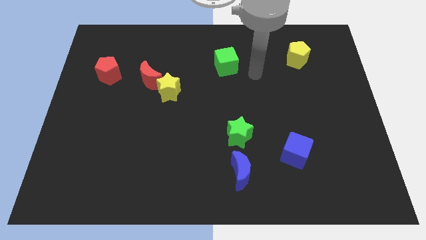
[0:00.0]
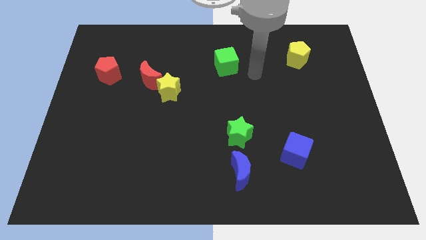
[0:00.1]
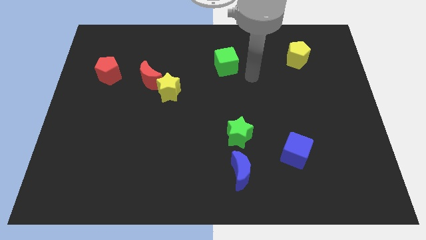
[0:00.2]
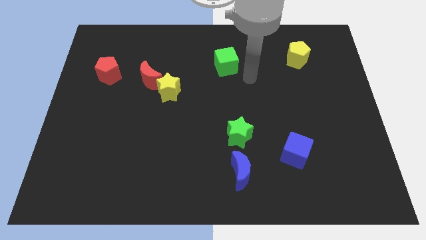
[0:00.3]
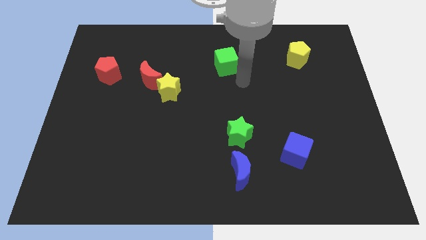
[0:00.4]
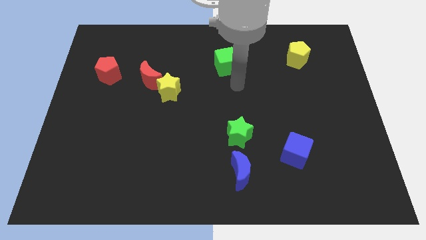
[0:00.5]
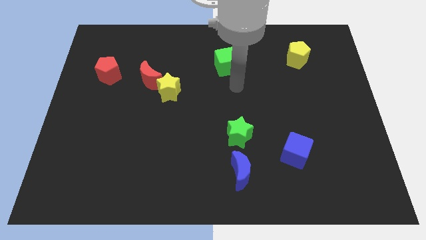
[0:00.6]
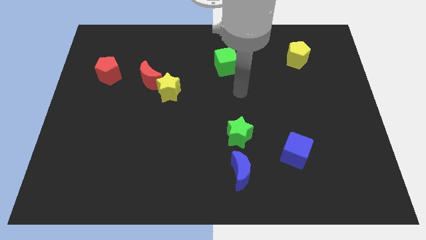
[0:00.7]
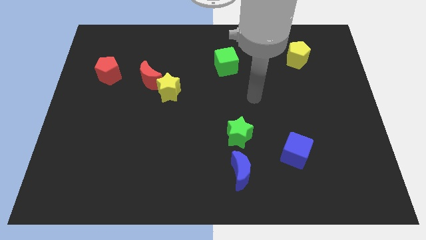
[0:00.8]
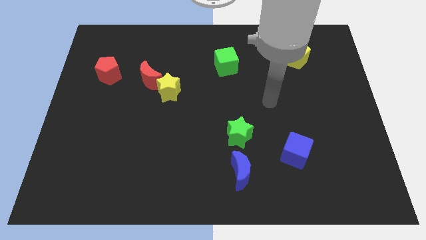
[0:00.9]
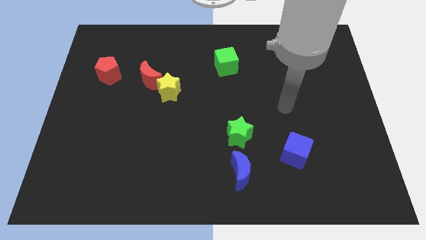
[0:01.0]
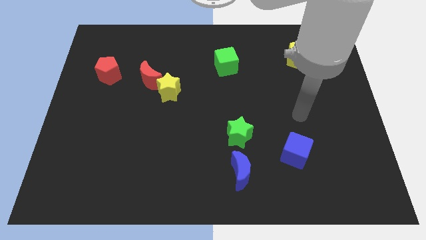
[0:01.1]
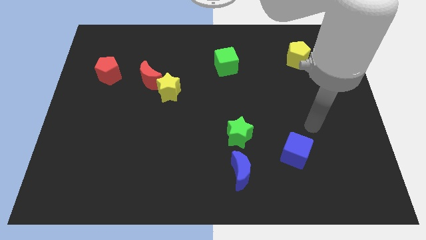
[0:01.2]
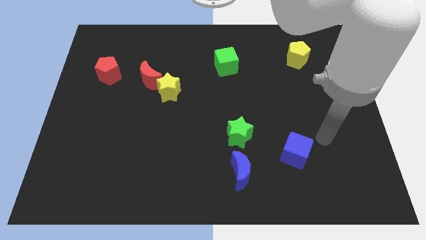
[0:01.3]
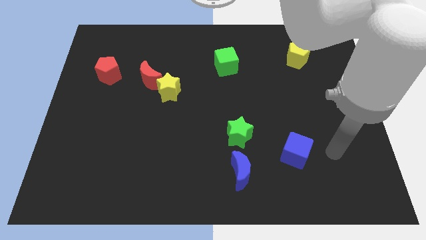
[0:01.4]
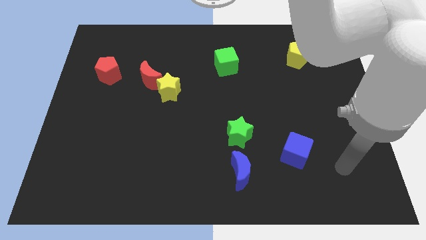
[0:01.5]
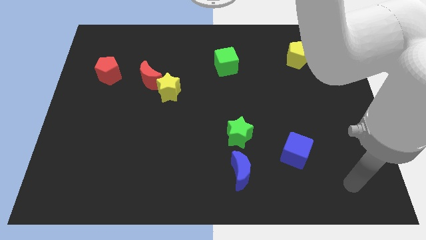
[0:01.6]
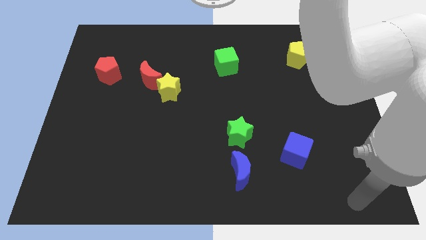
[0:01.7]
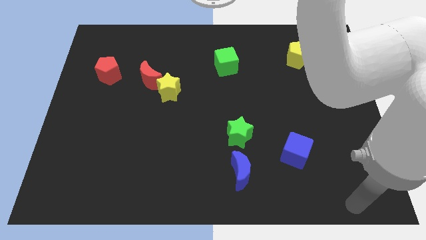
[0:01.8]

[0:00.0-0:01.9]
go to the bottom right side of the board

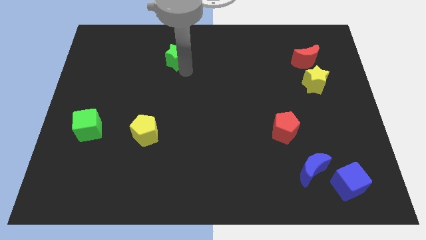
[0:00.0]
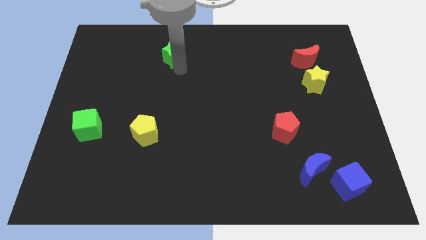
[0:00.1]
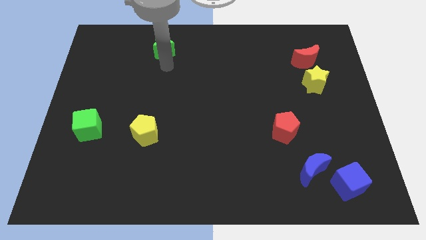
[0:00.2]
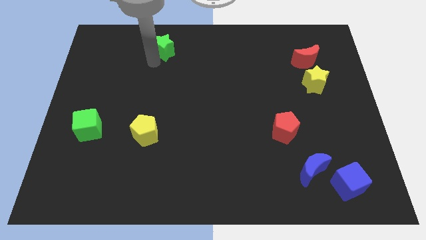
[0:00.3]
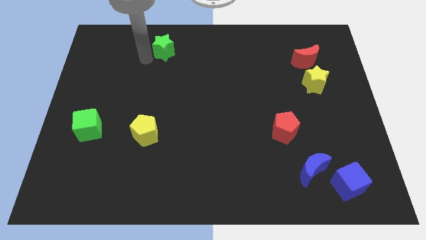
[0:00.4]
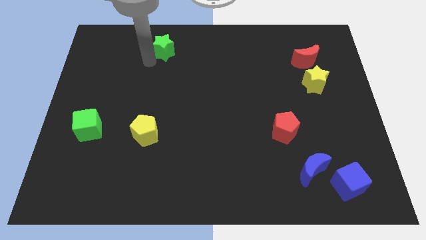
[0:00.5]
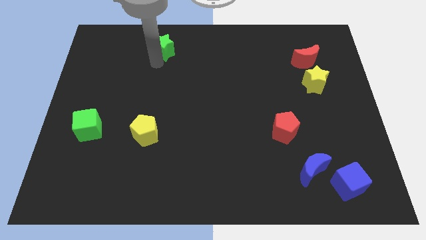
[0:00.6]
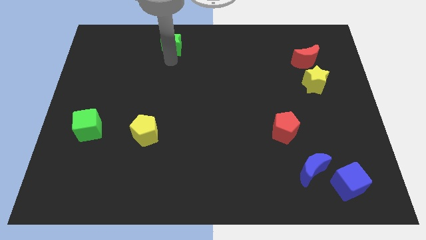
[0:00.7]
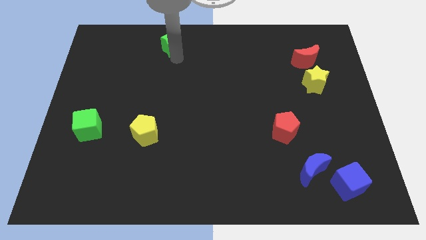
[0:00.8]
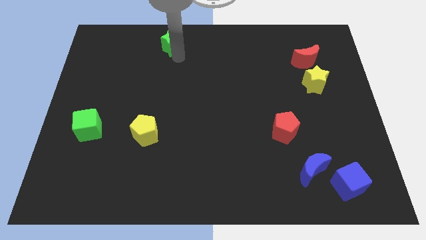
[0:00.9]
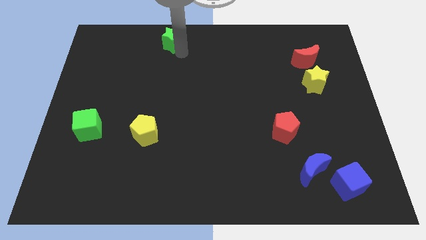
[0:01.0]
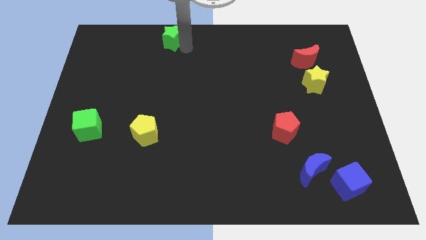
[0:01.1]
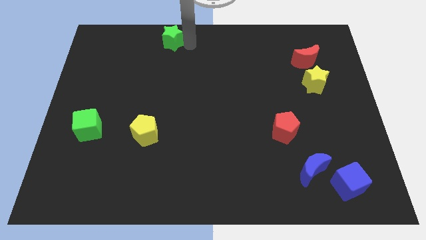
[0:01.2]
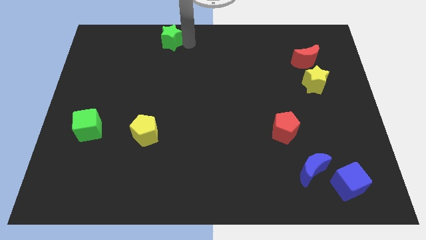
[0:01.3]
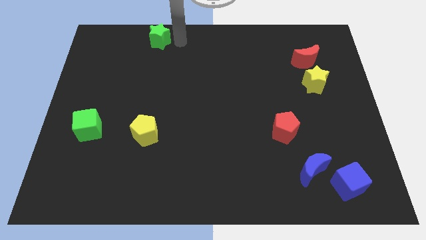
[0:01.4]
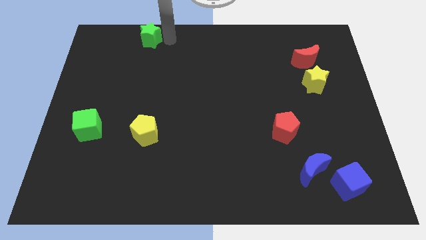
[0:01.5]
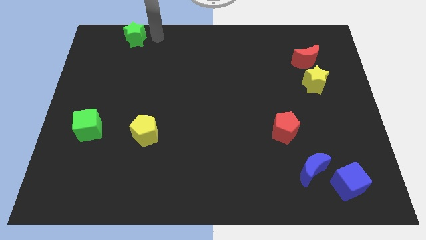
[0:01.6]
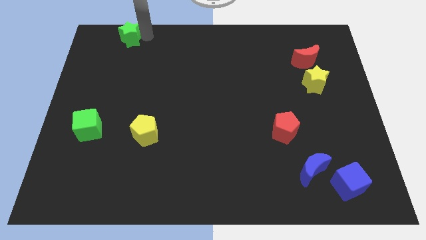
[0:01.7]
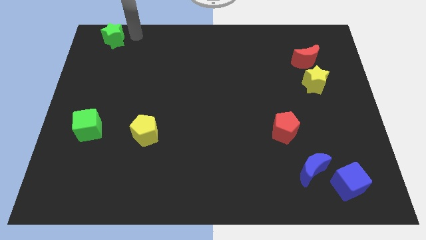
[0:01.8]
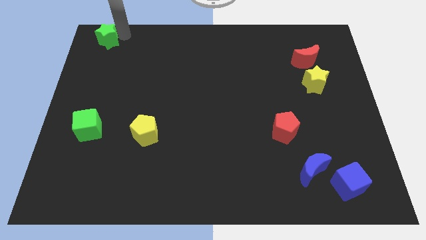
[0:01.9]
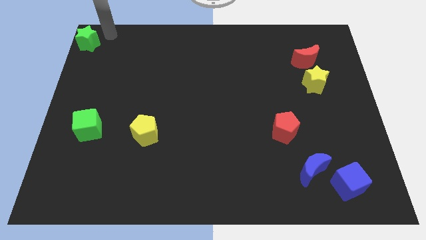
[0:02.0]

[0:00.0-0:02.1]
put the green star vertically above the green cube

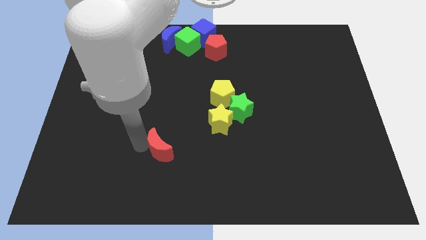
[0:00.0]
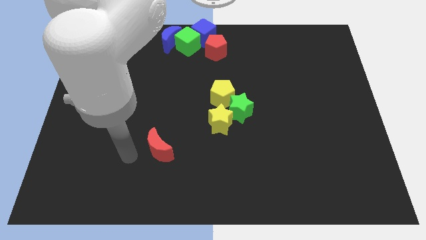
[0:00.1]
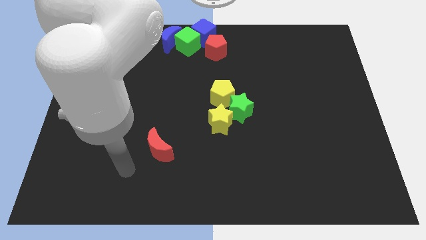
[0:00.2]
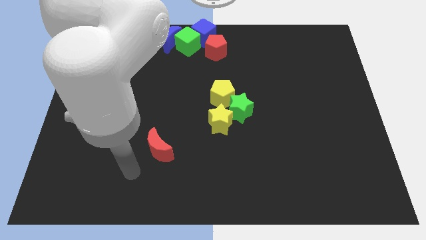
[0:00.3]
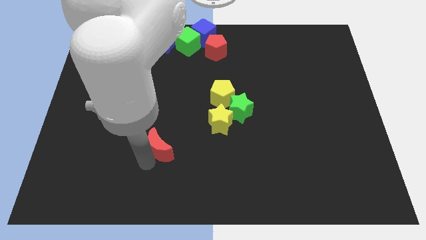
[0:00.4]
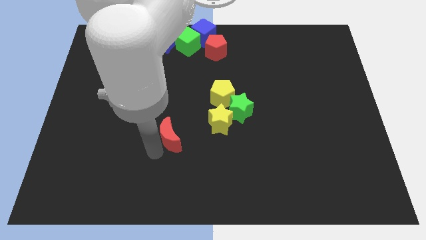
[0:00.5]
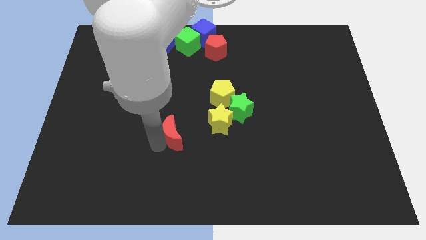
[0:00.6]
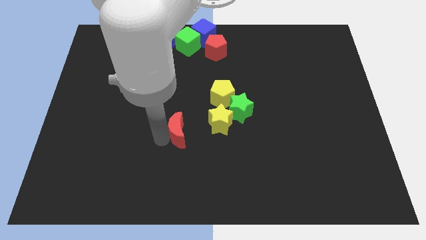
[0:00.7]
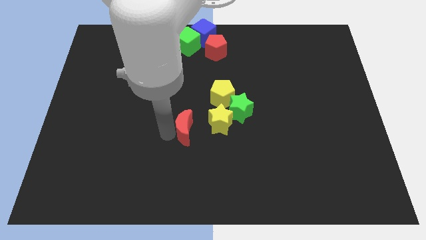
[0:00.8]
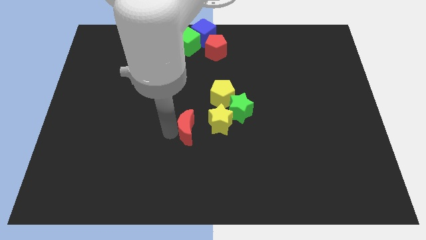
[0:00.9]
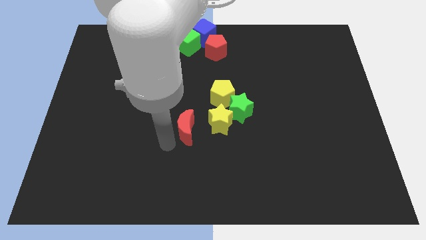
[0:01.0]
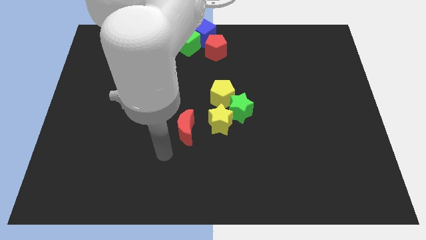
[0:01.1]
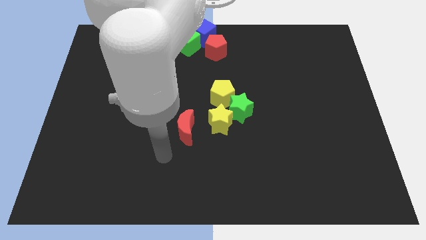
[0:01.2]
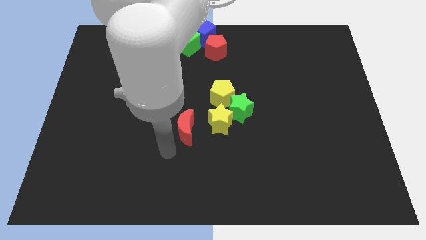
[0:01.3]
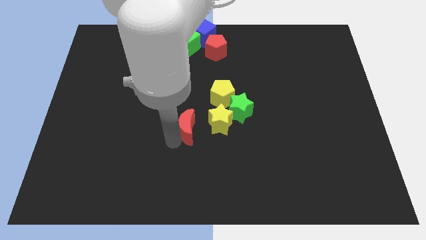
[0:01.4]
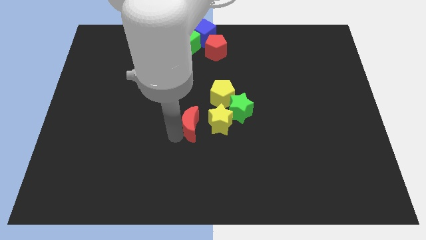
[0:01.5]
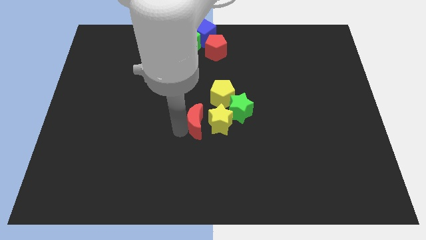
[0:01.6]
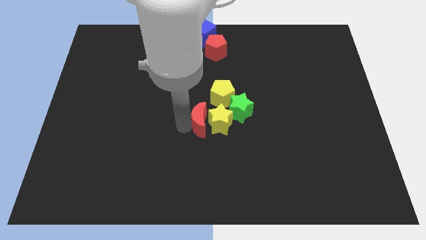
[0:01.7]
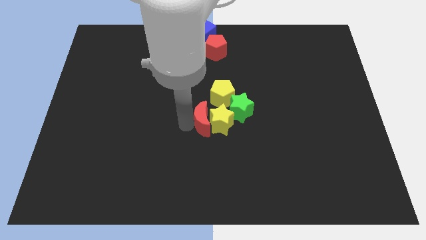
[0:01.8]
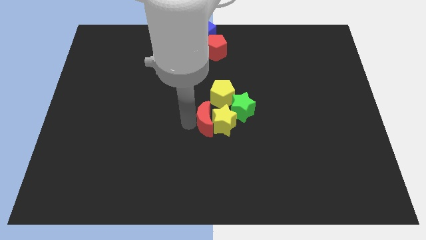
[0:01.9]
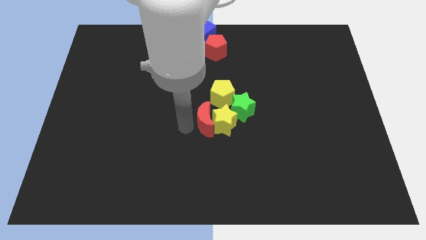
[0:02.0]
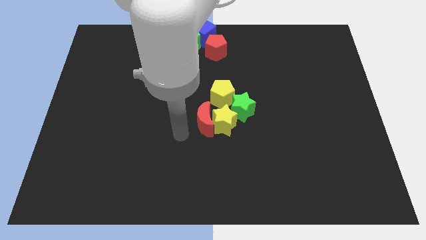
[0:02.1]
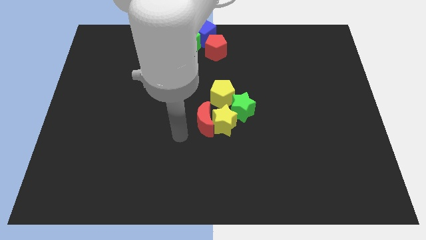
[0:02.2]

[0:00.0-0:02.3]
place the red crescent to the left side of the yellow star

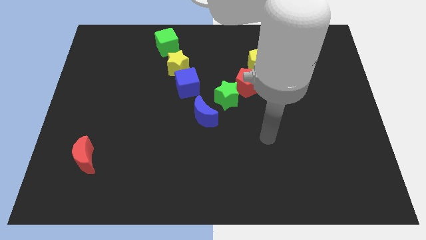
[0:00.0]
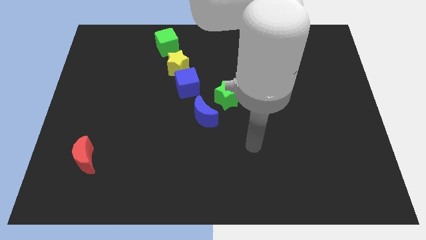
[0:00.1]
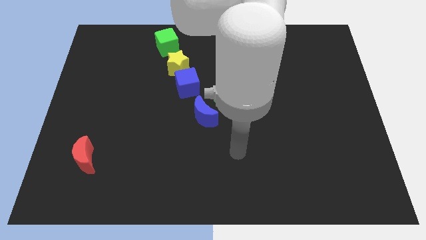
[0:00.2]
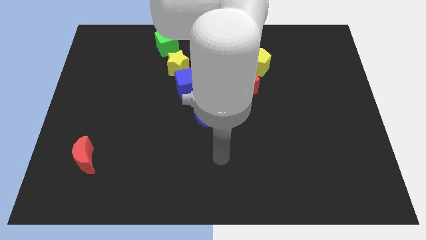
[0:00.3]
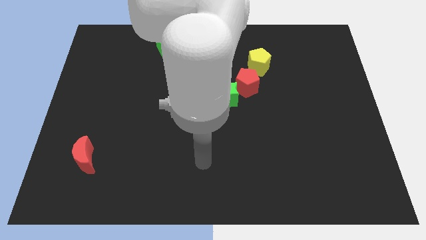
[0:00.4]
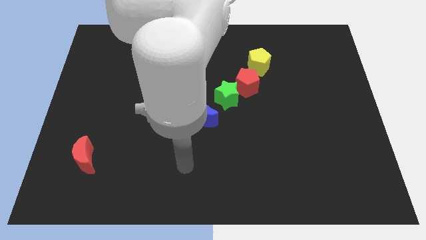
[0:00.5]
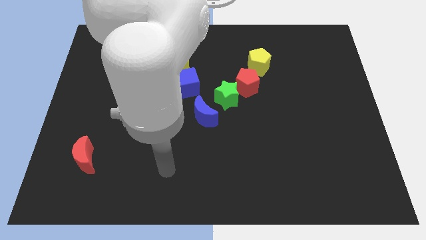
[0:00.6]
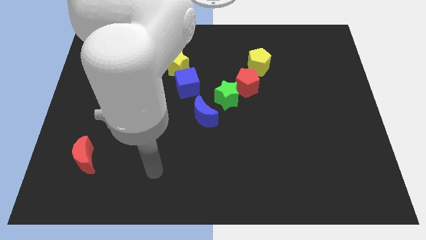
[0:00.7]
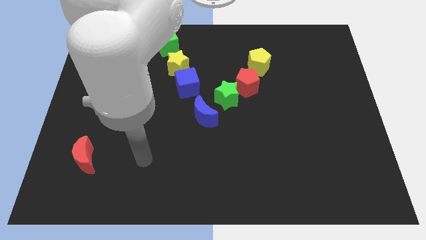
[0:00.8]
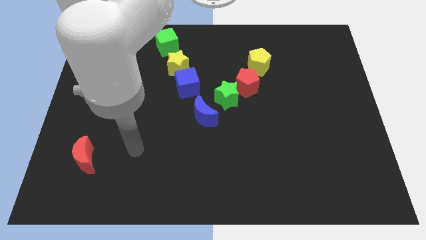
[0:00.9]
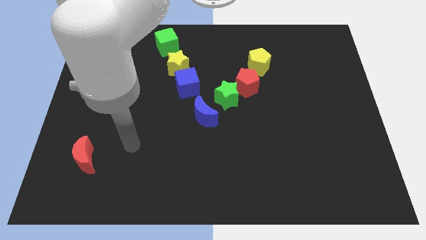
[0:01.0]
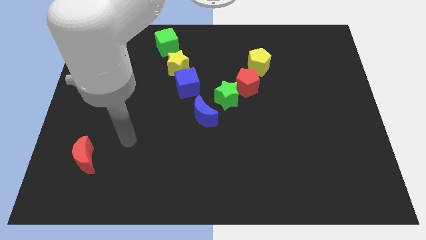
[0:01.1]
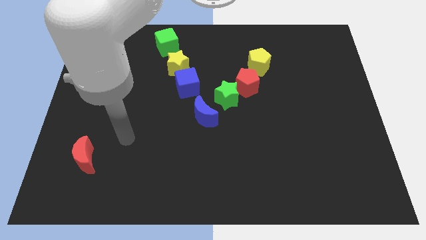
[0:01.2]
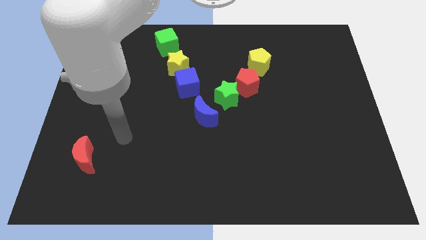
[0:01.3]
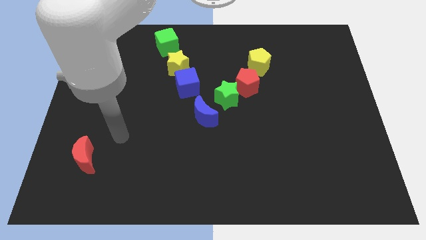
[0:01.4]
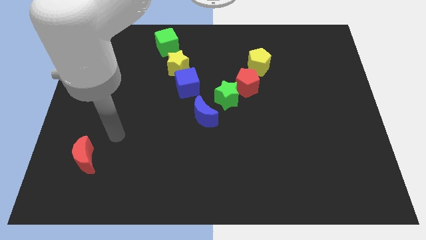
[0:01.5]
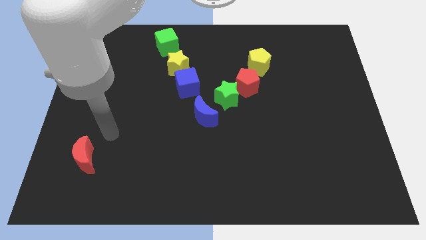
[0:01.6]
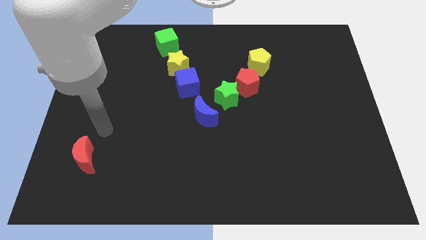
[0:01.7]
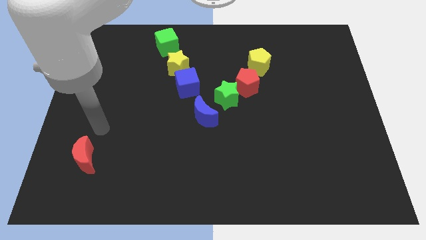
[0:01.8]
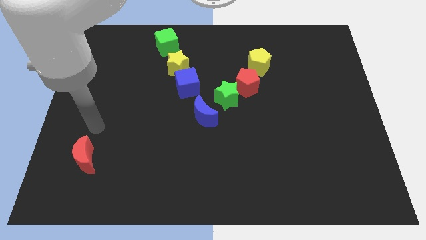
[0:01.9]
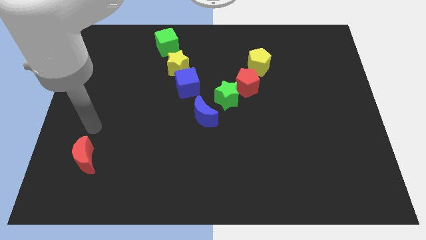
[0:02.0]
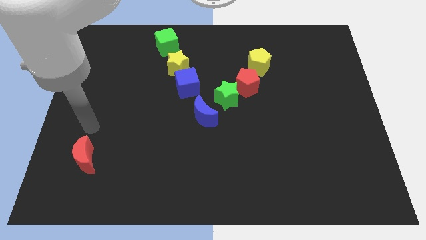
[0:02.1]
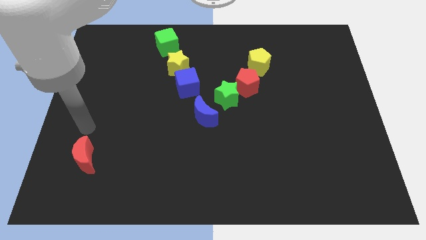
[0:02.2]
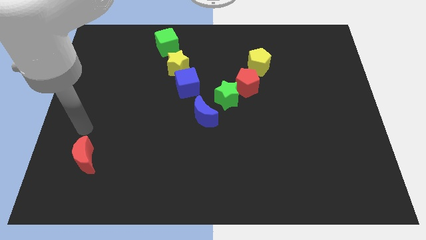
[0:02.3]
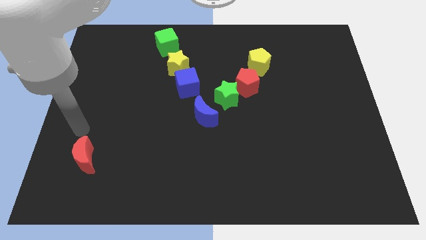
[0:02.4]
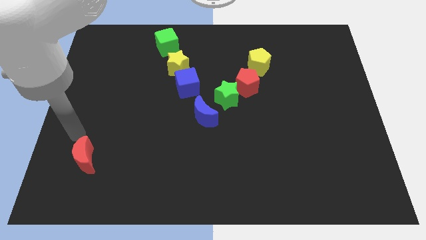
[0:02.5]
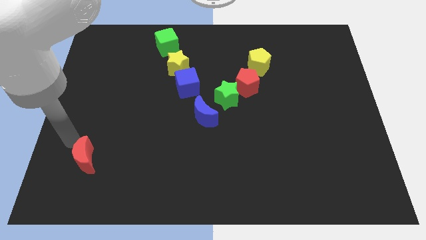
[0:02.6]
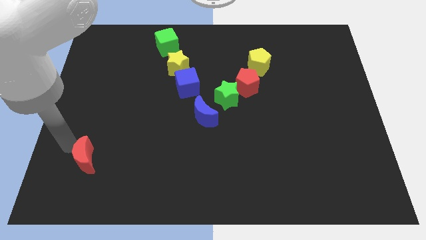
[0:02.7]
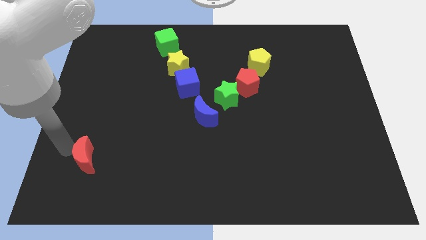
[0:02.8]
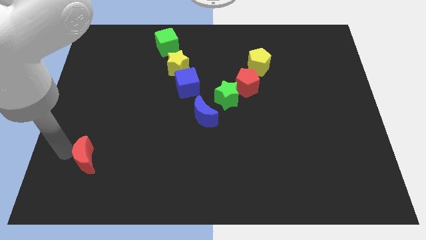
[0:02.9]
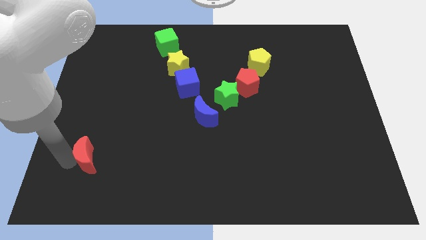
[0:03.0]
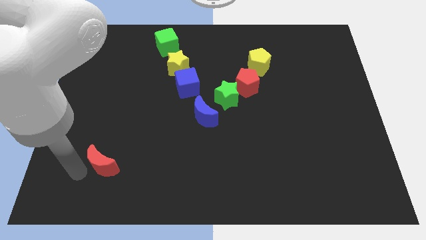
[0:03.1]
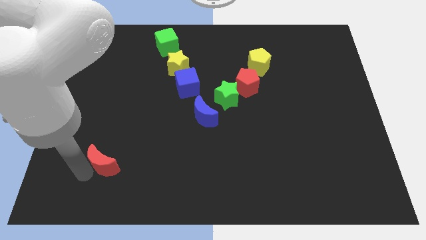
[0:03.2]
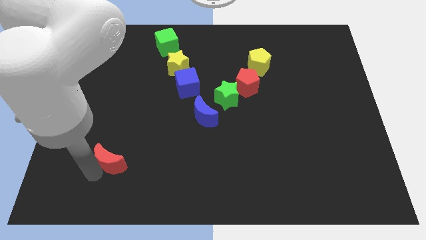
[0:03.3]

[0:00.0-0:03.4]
push the red crescent slightly to the right side of the board
